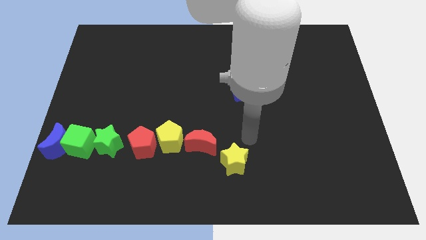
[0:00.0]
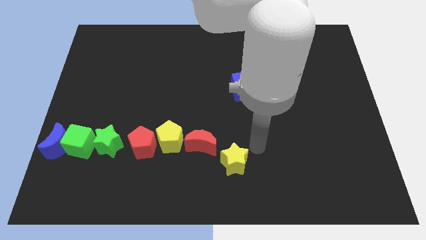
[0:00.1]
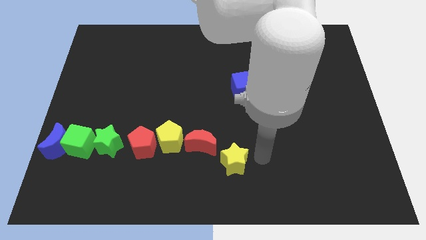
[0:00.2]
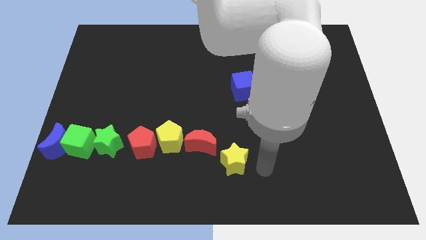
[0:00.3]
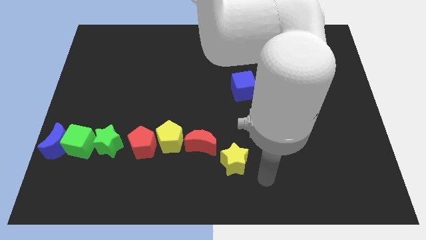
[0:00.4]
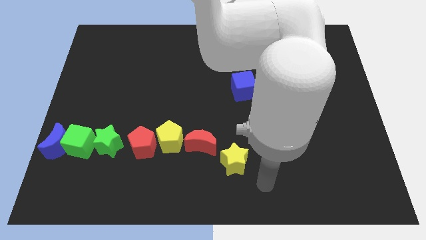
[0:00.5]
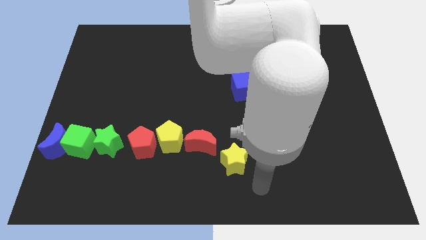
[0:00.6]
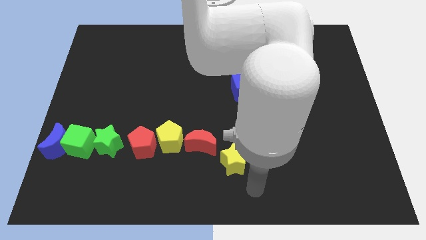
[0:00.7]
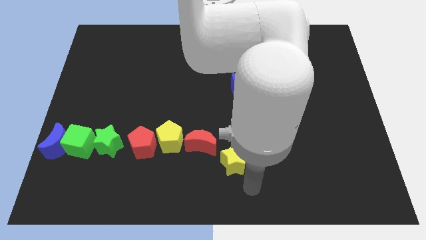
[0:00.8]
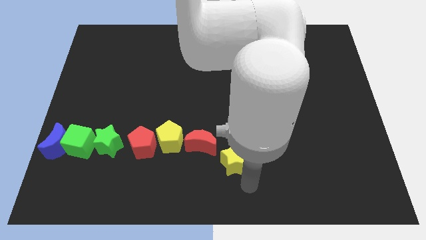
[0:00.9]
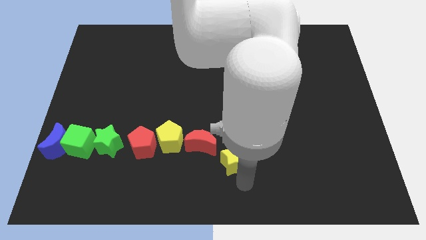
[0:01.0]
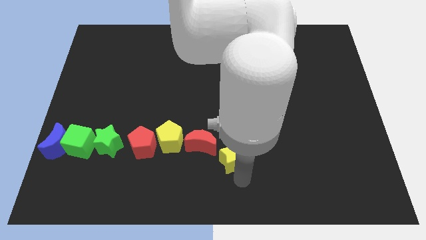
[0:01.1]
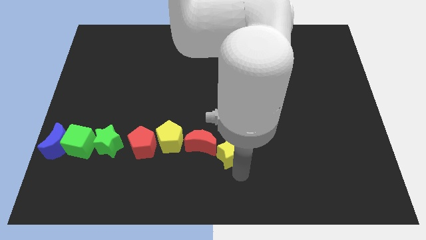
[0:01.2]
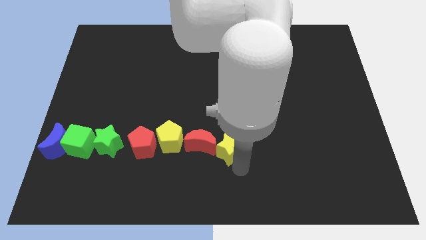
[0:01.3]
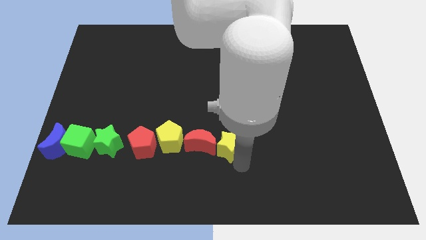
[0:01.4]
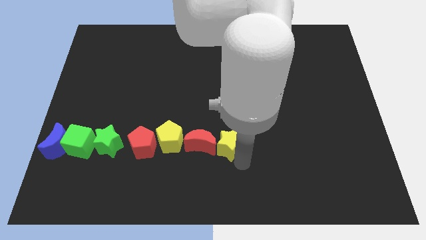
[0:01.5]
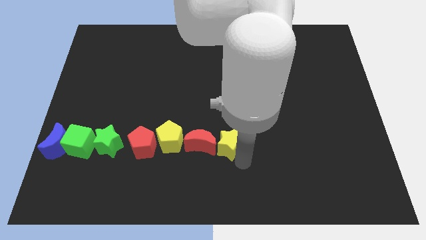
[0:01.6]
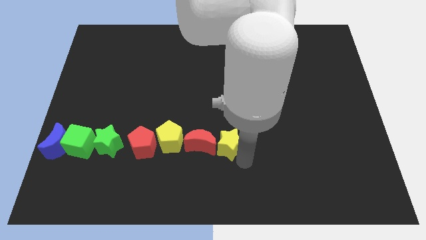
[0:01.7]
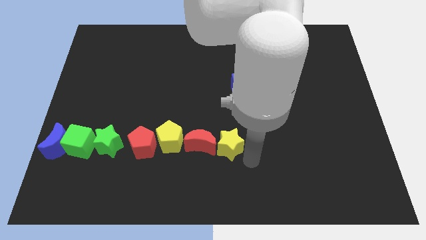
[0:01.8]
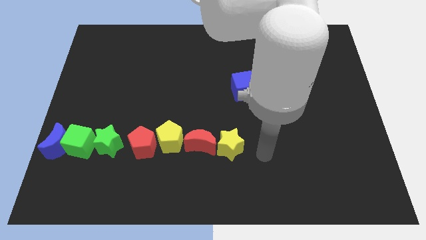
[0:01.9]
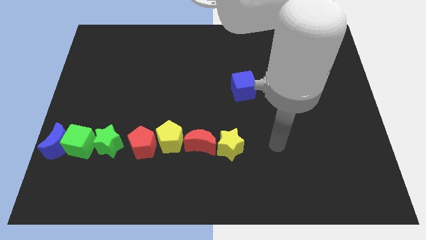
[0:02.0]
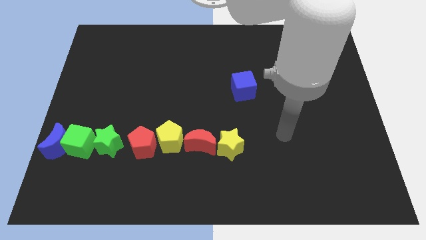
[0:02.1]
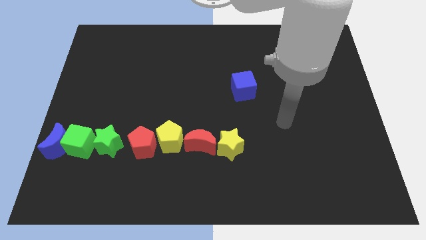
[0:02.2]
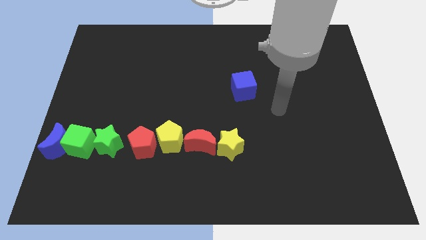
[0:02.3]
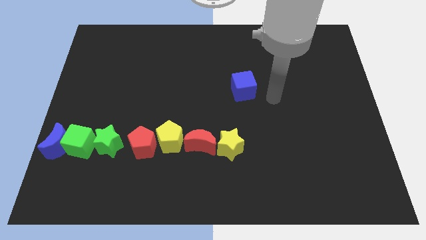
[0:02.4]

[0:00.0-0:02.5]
place the yellow star right to the red crescent

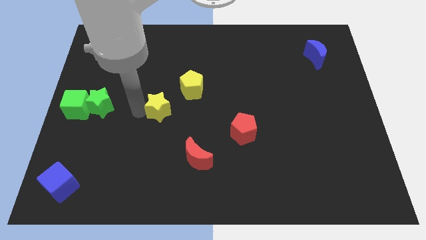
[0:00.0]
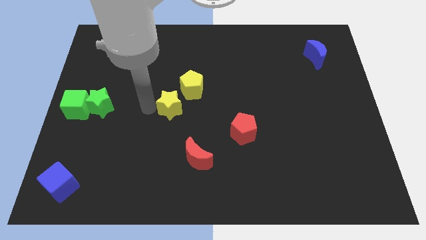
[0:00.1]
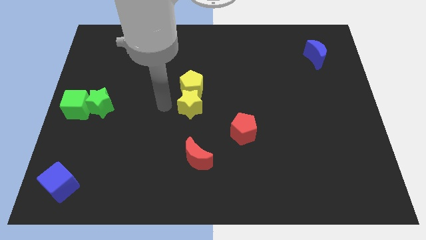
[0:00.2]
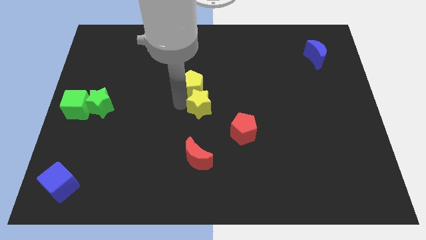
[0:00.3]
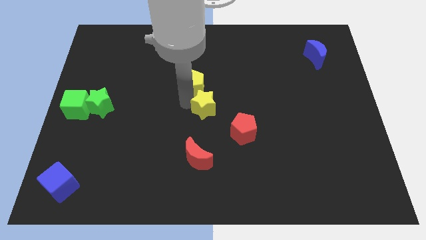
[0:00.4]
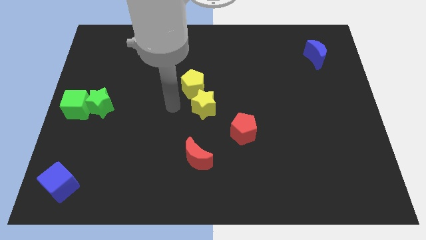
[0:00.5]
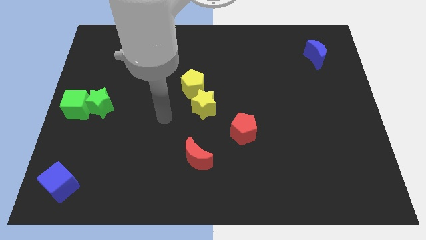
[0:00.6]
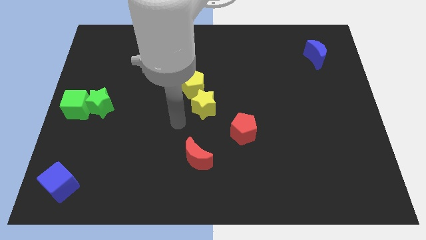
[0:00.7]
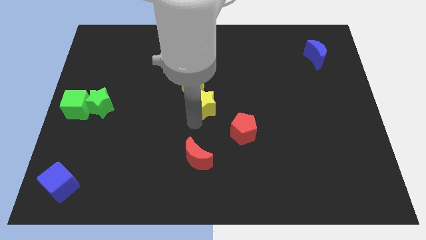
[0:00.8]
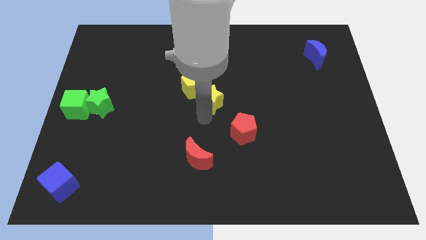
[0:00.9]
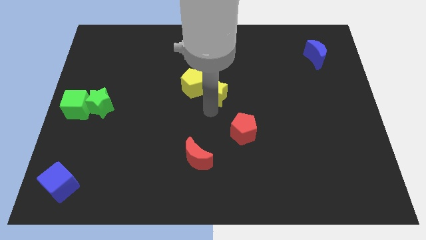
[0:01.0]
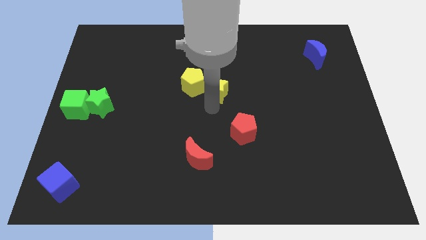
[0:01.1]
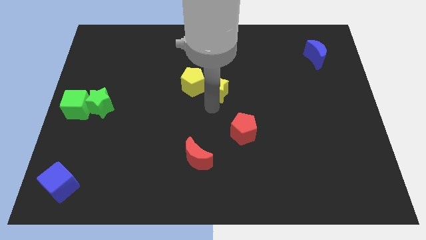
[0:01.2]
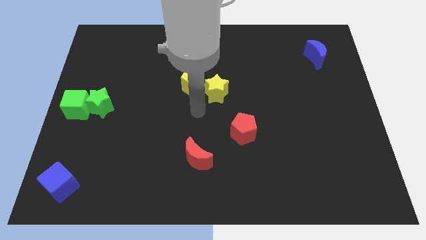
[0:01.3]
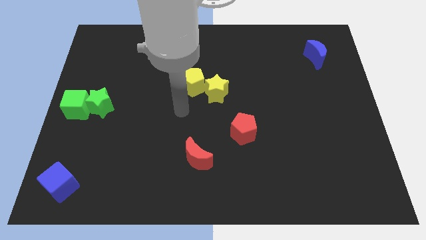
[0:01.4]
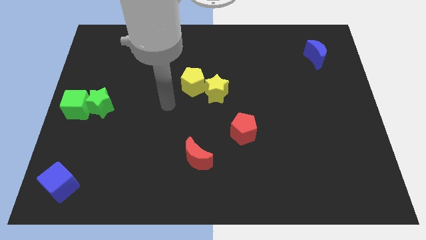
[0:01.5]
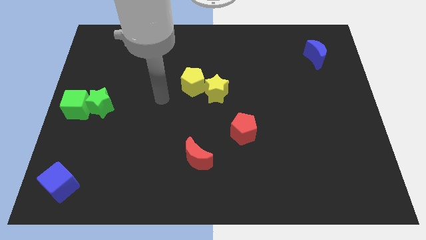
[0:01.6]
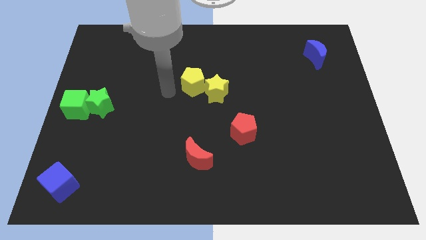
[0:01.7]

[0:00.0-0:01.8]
place the yellow star right to the yellow pentagon

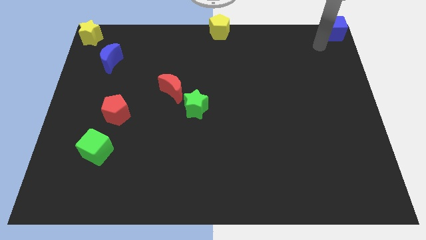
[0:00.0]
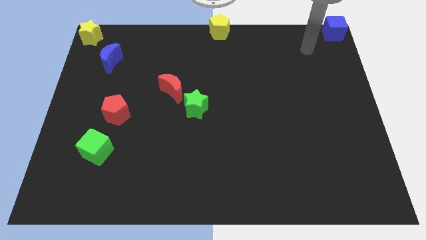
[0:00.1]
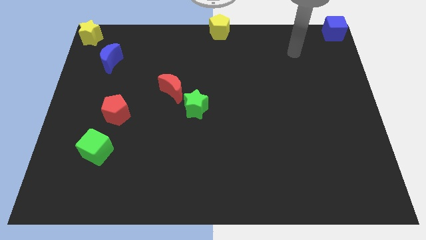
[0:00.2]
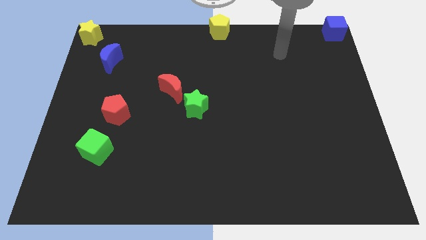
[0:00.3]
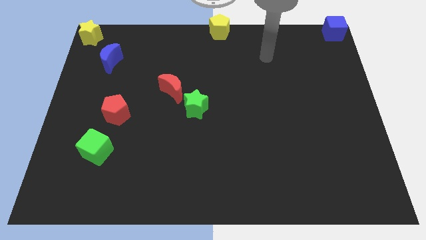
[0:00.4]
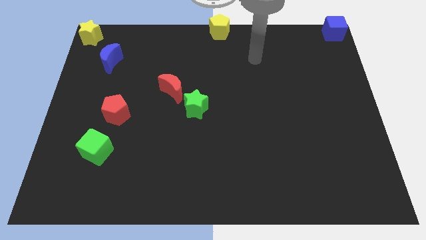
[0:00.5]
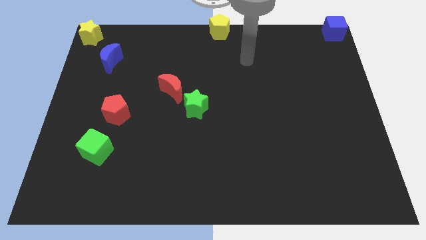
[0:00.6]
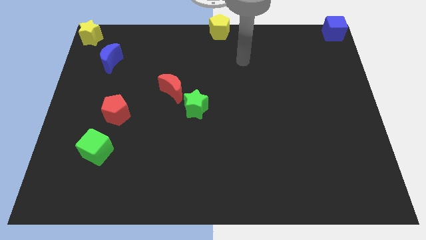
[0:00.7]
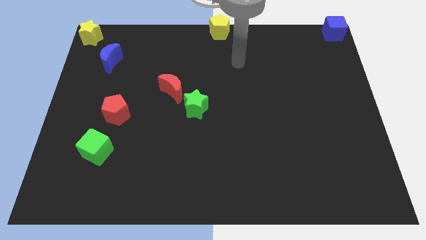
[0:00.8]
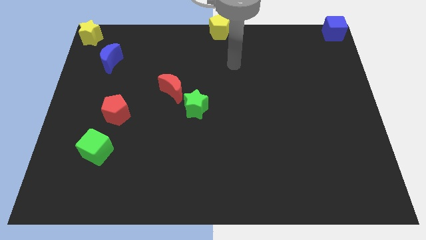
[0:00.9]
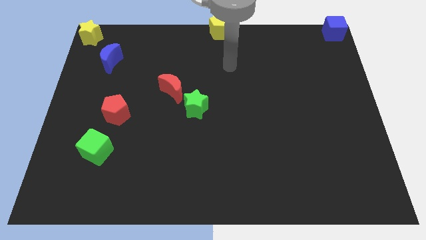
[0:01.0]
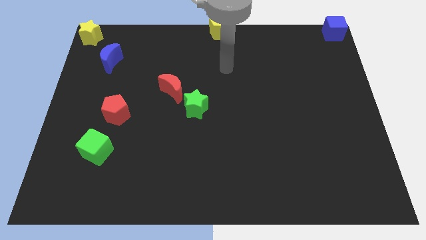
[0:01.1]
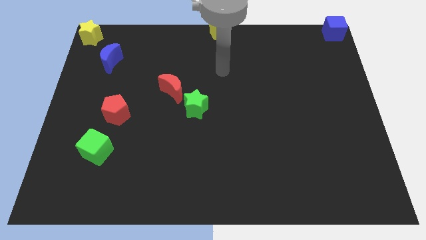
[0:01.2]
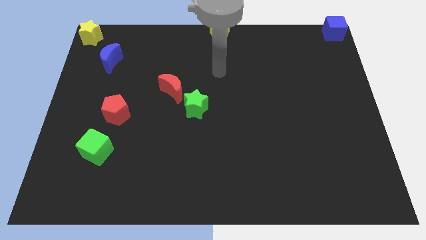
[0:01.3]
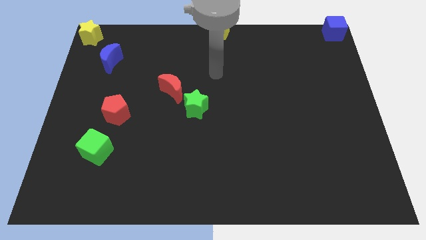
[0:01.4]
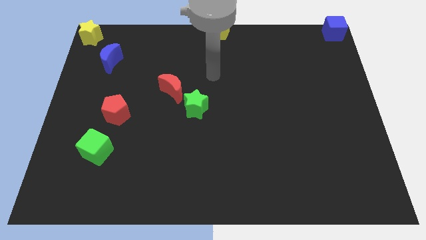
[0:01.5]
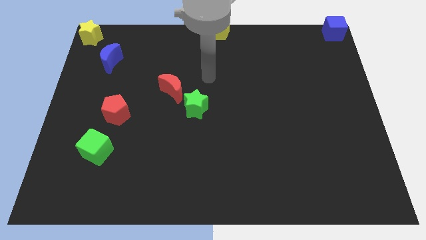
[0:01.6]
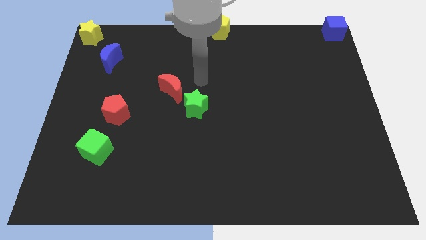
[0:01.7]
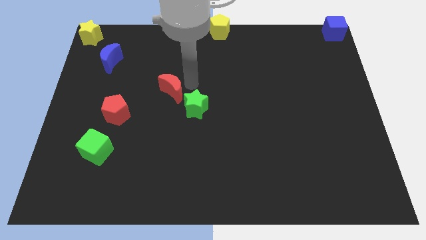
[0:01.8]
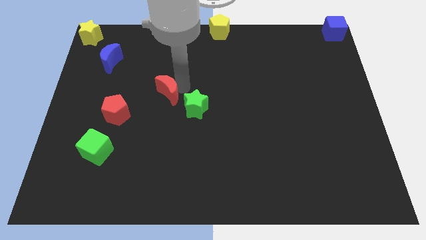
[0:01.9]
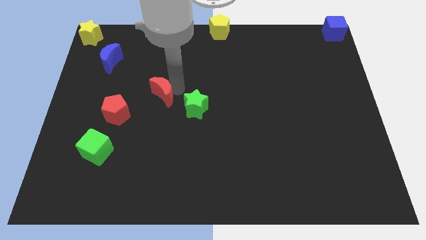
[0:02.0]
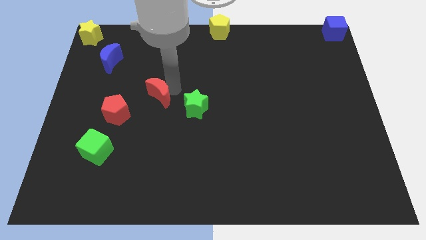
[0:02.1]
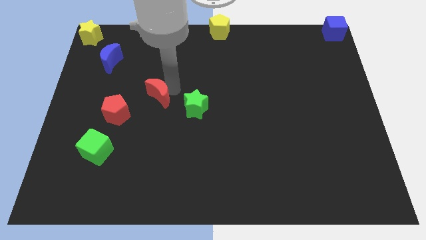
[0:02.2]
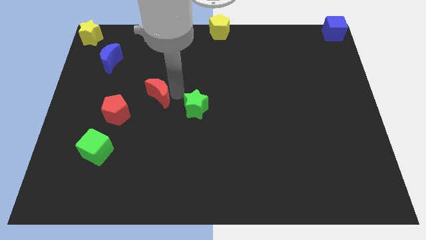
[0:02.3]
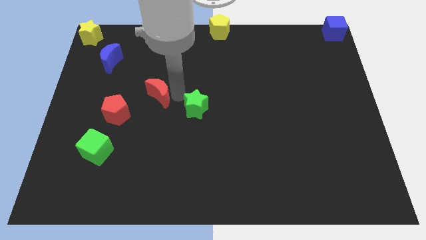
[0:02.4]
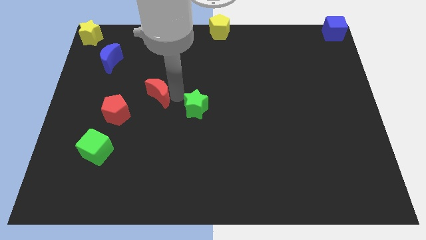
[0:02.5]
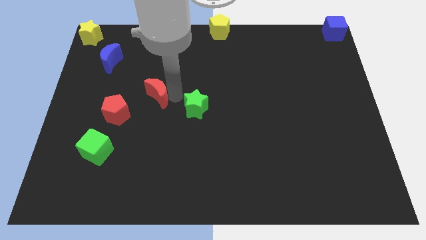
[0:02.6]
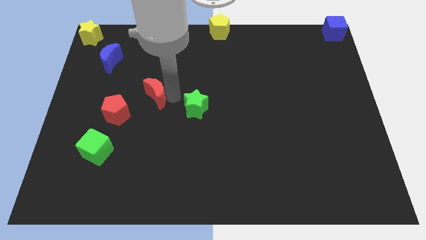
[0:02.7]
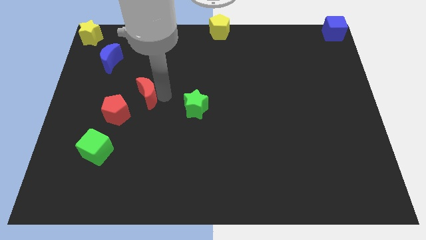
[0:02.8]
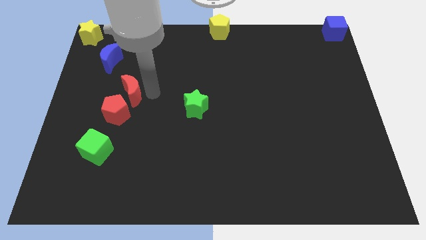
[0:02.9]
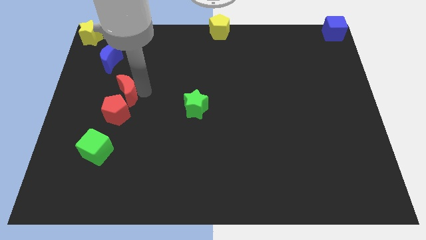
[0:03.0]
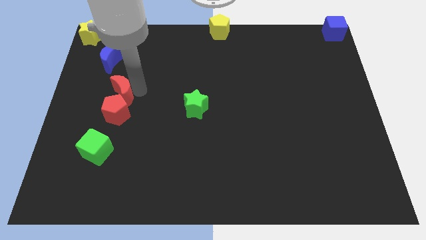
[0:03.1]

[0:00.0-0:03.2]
put the red moon vertically above the red pentagon

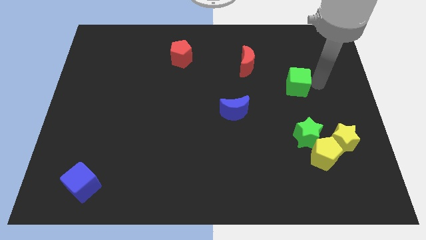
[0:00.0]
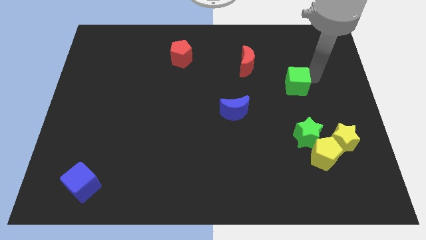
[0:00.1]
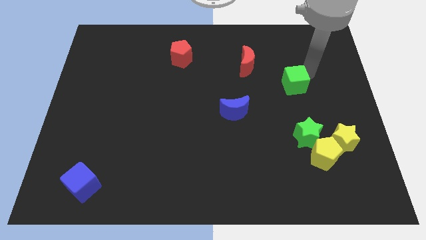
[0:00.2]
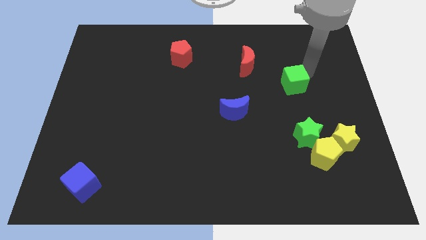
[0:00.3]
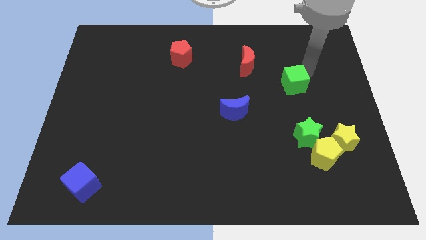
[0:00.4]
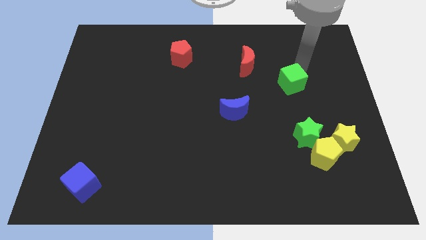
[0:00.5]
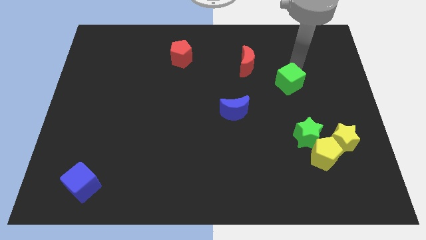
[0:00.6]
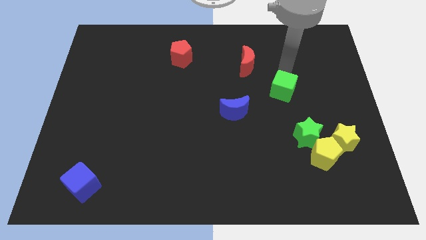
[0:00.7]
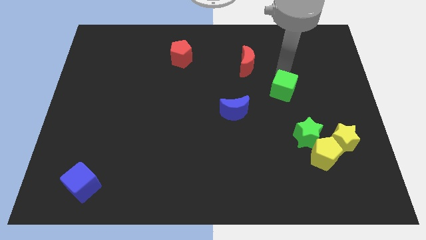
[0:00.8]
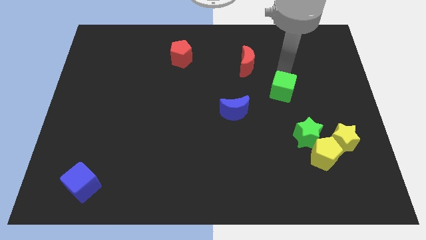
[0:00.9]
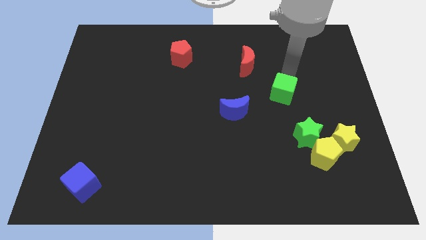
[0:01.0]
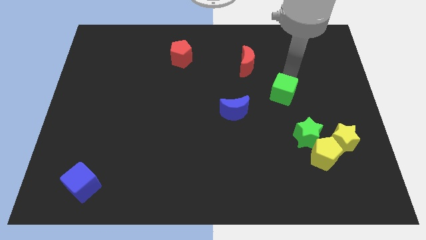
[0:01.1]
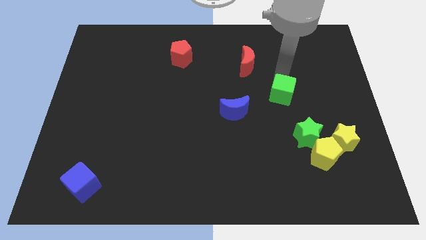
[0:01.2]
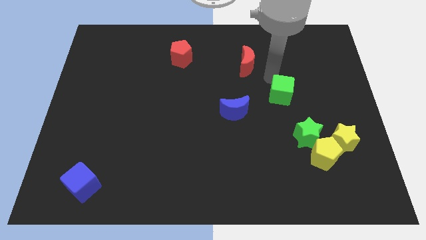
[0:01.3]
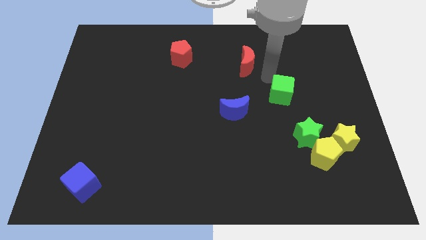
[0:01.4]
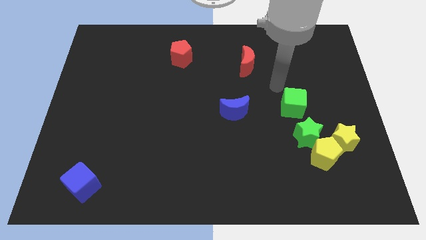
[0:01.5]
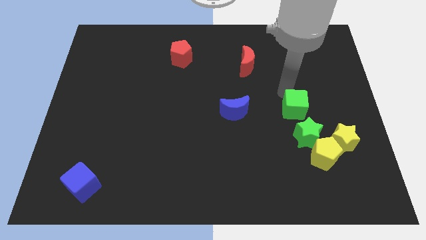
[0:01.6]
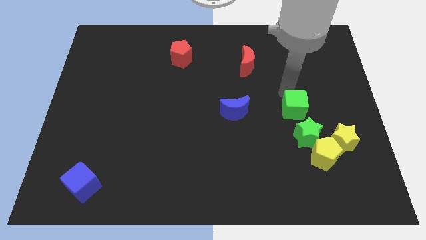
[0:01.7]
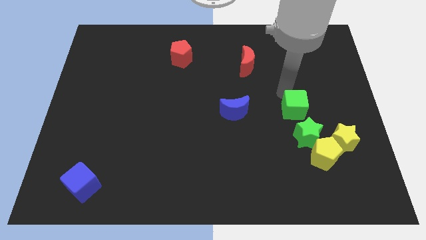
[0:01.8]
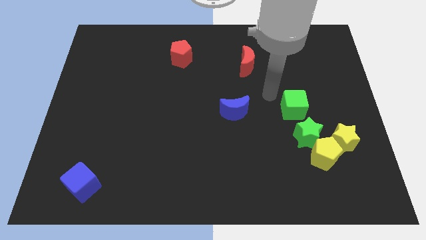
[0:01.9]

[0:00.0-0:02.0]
place the green star right to the blue moon
